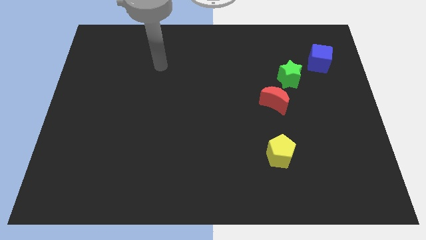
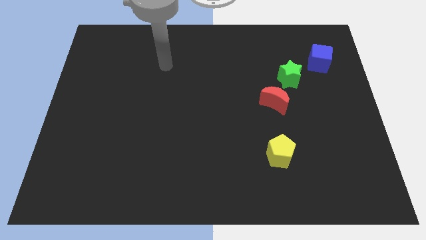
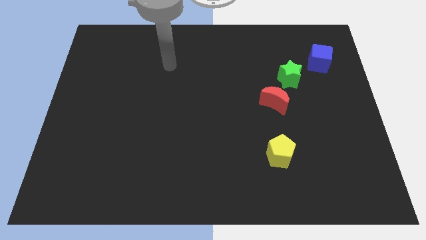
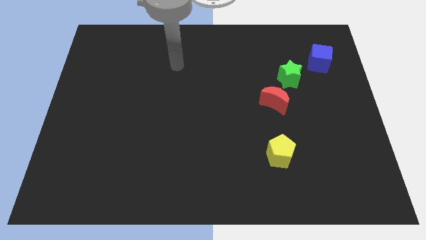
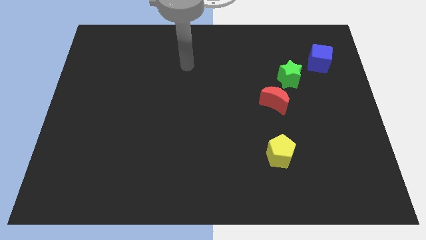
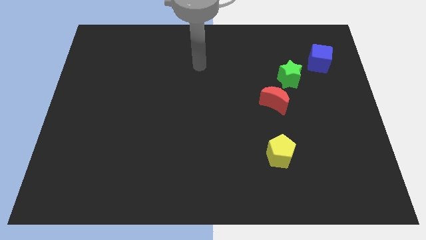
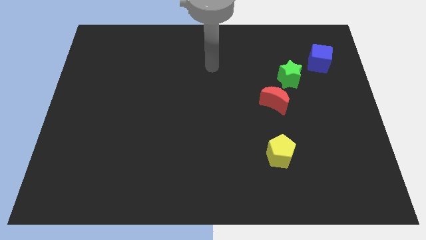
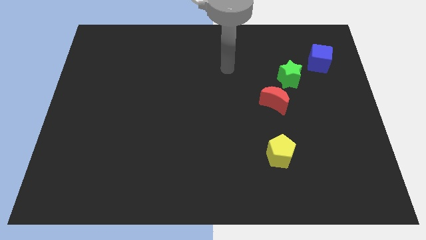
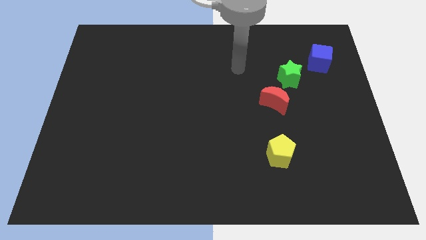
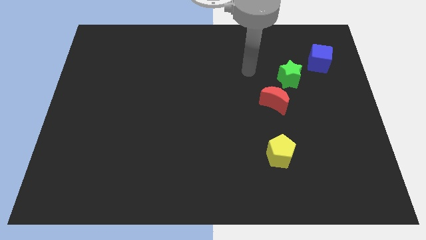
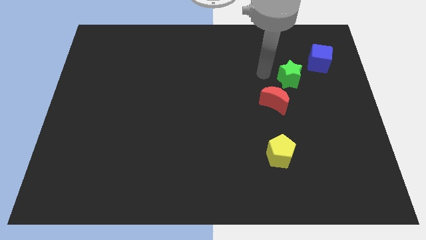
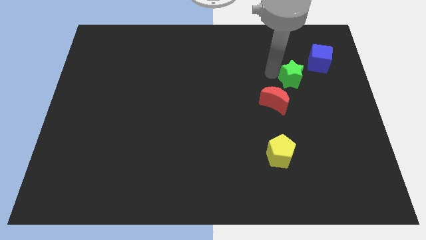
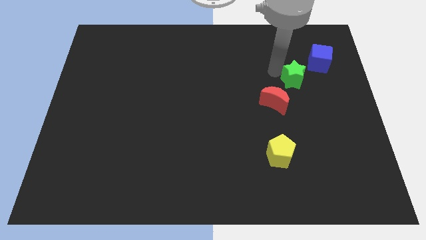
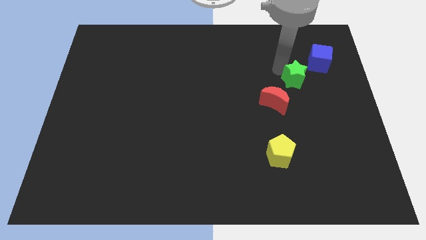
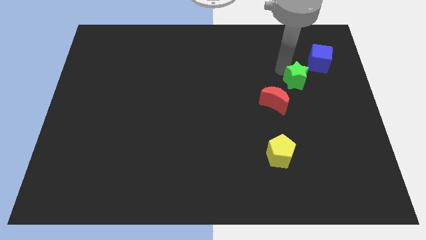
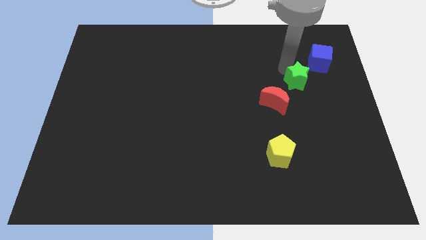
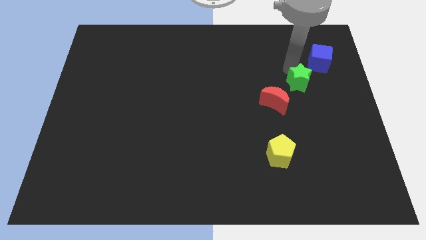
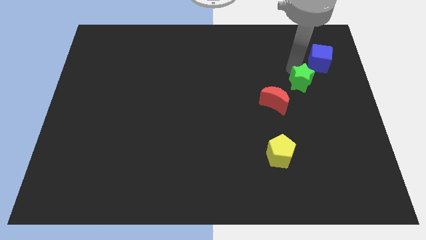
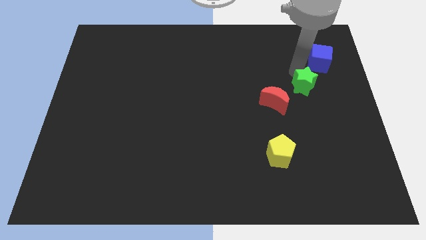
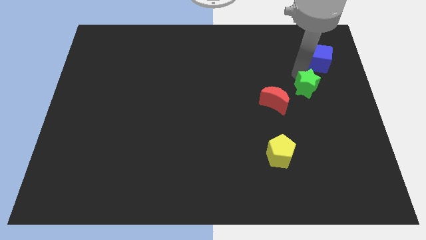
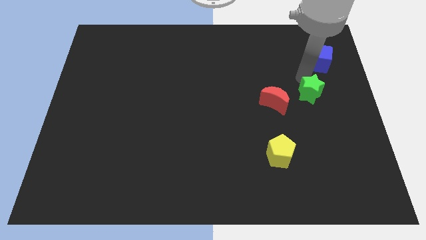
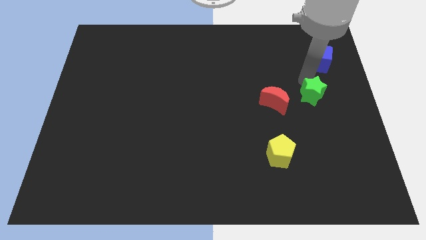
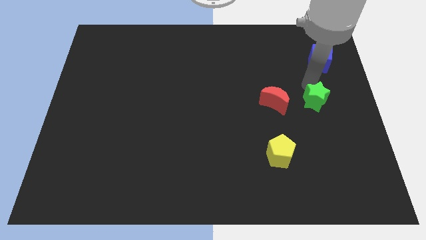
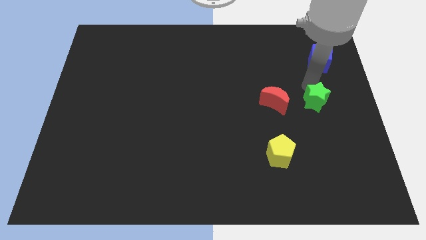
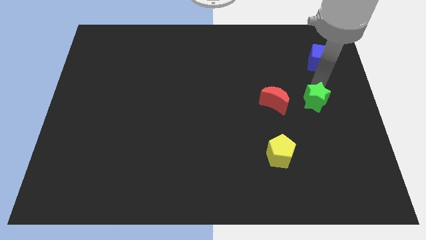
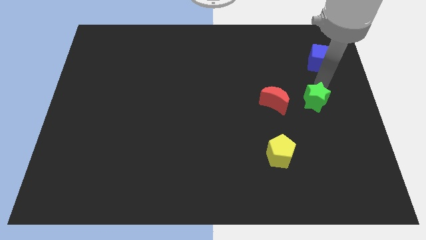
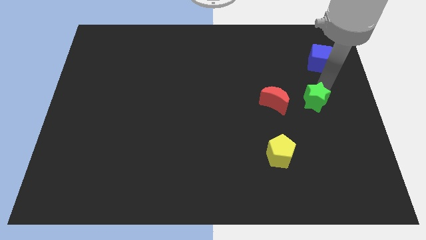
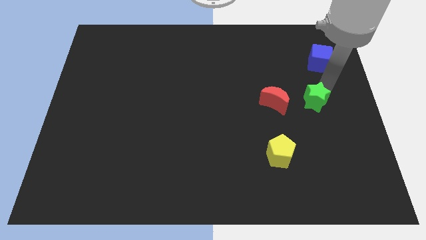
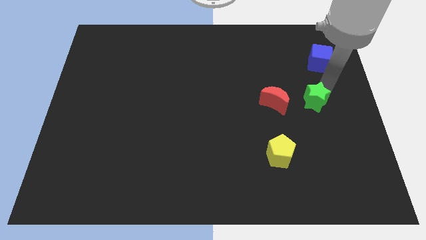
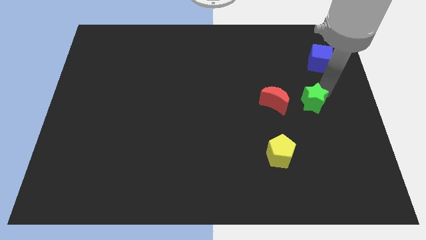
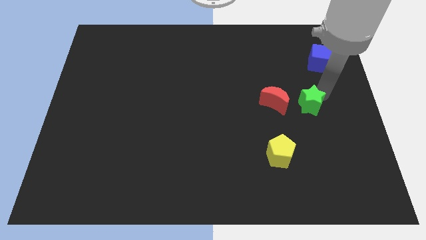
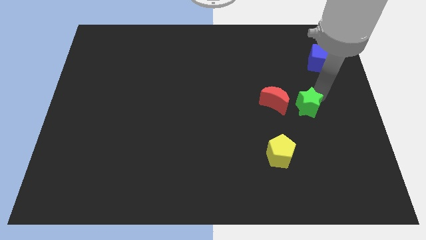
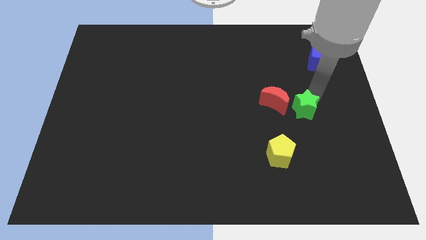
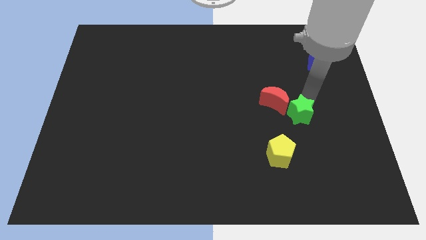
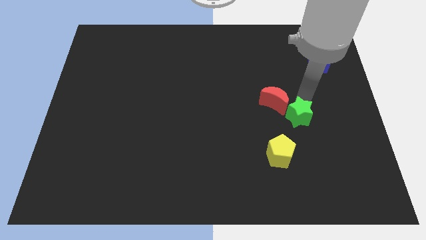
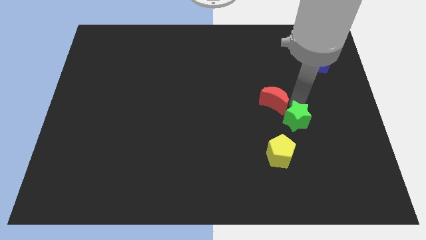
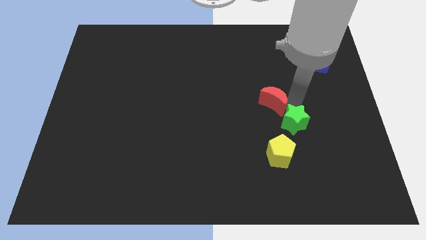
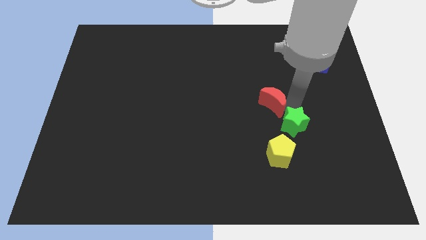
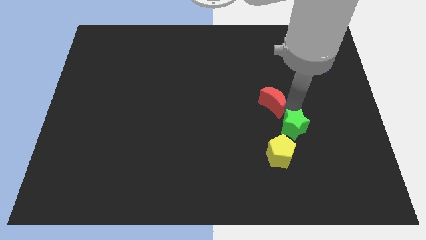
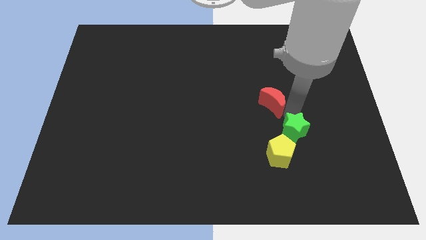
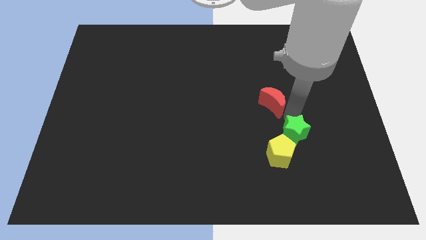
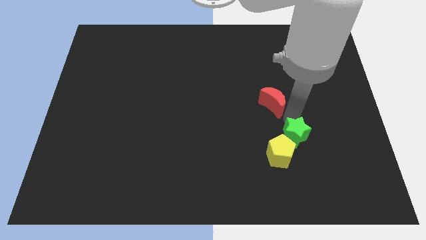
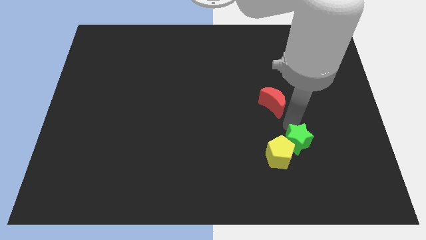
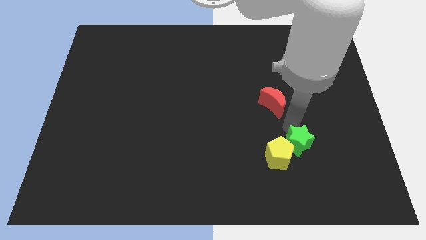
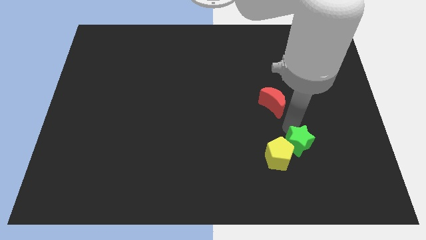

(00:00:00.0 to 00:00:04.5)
move the green block next to the pentagon

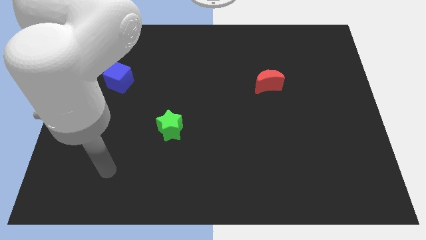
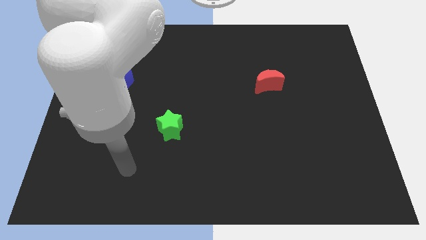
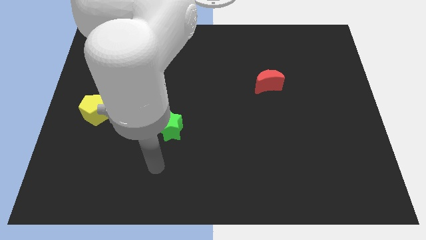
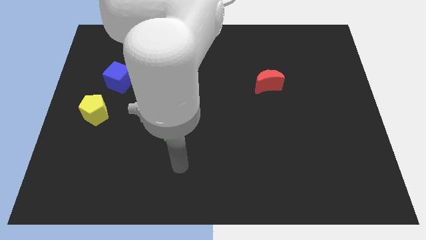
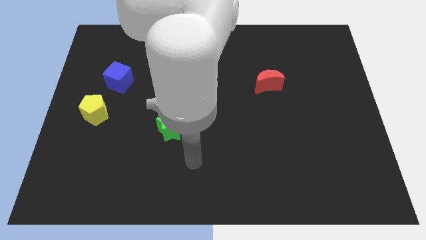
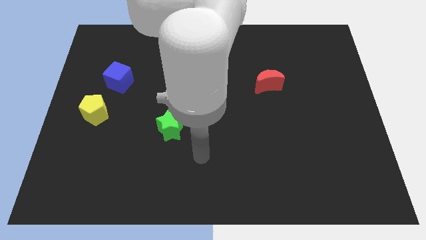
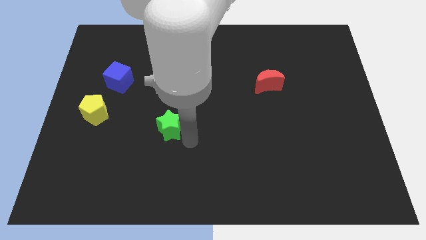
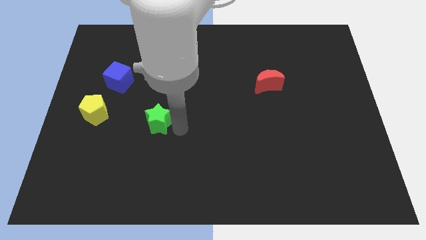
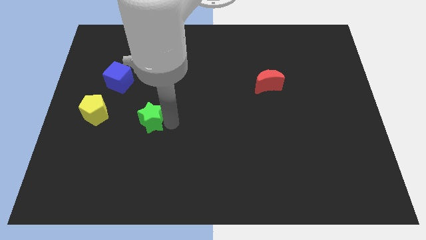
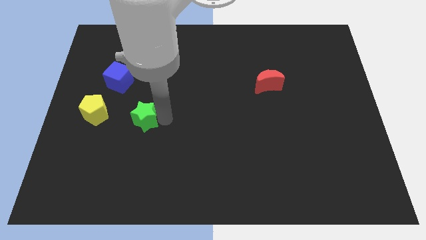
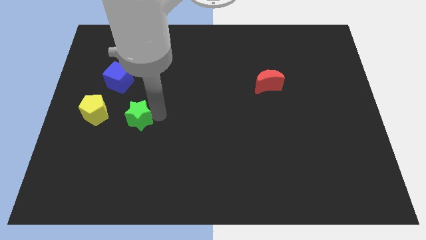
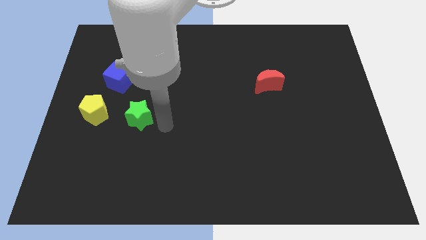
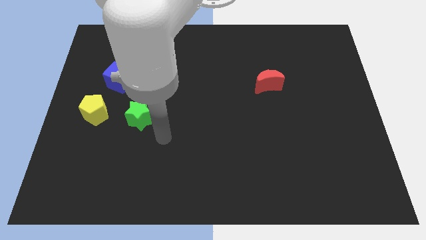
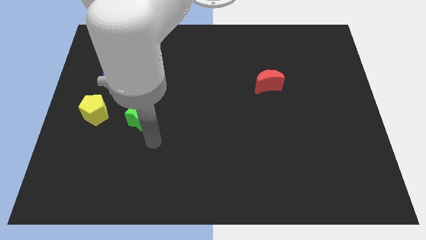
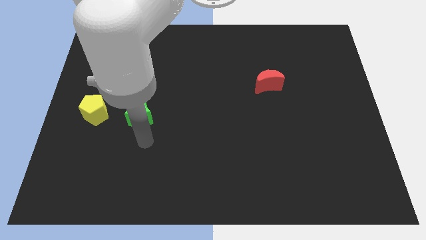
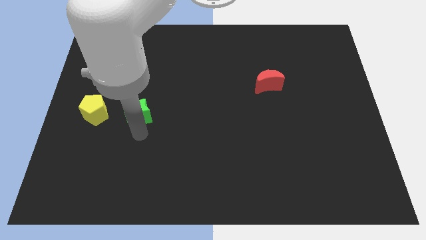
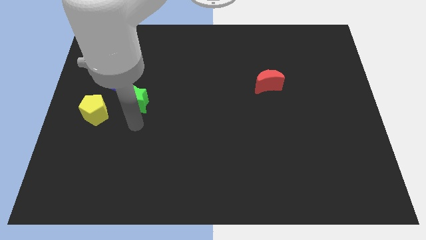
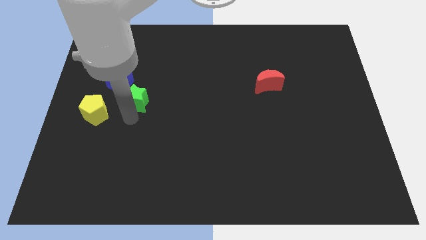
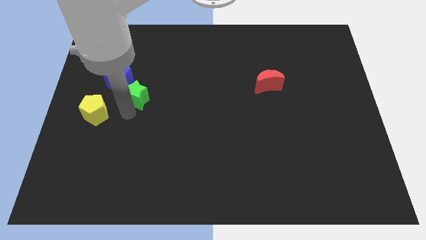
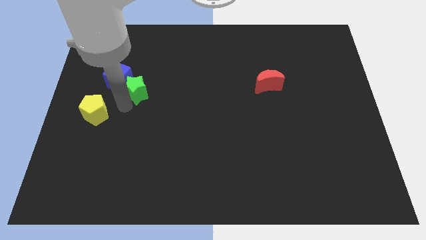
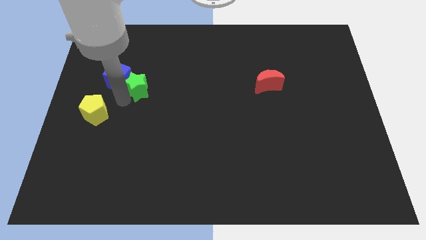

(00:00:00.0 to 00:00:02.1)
slide the green star to the cube

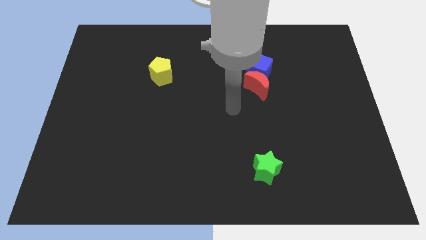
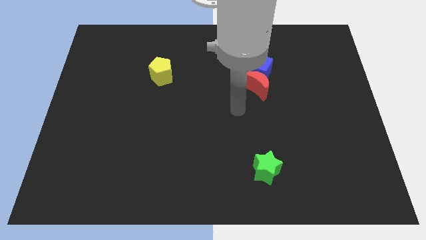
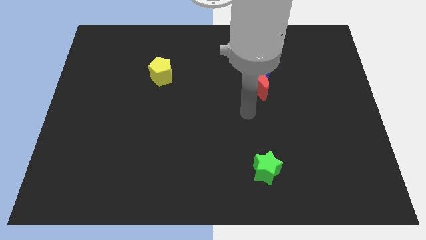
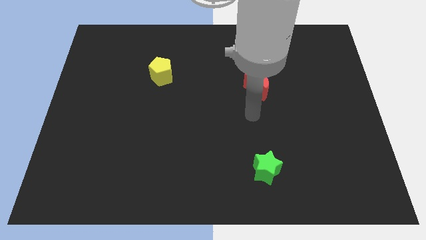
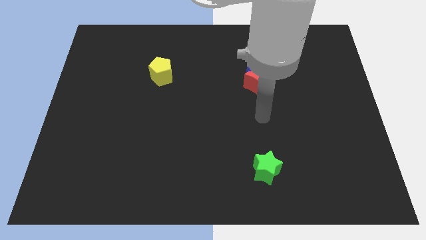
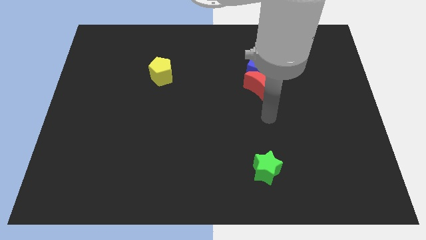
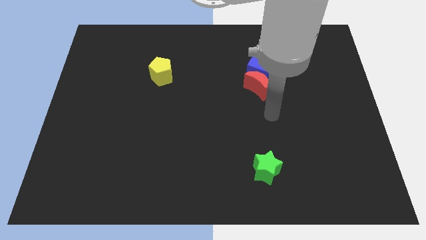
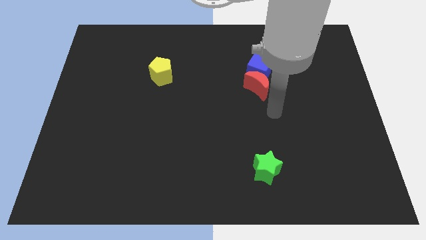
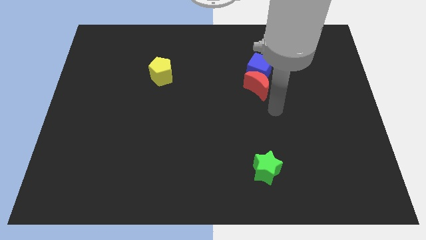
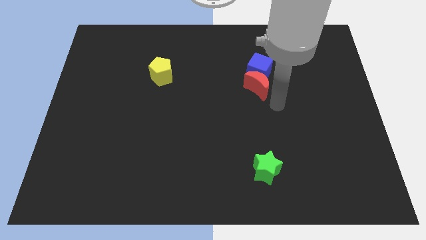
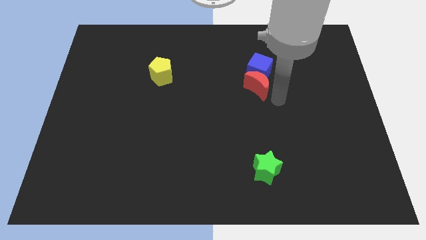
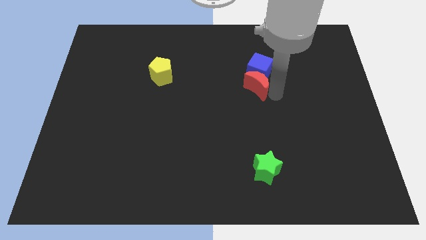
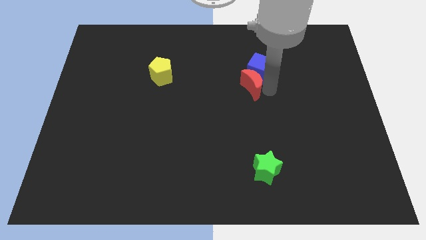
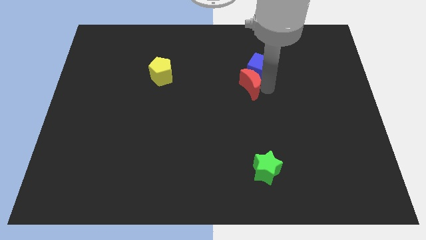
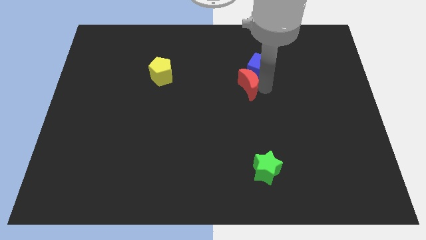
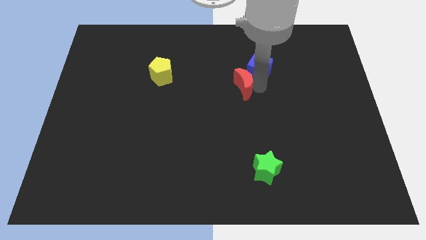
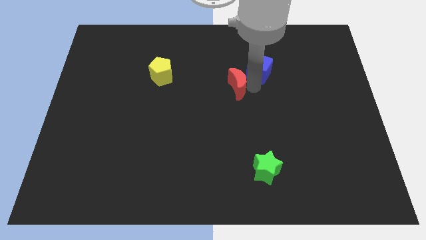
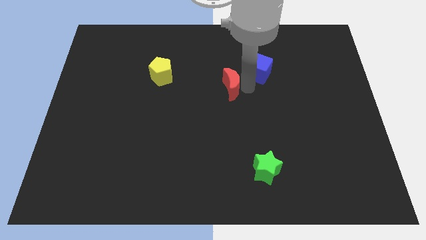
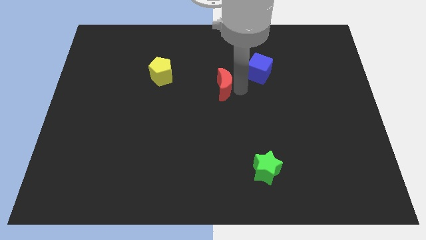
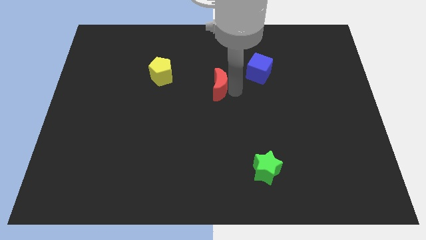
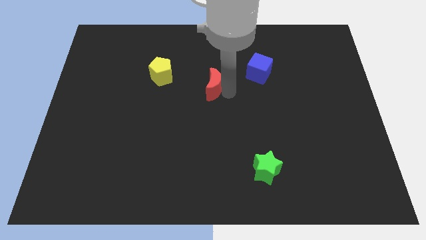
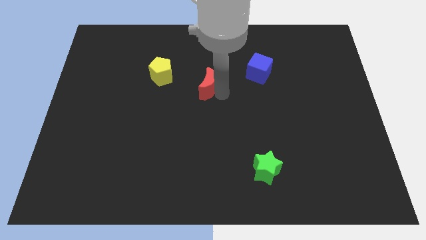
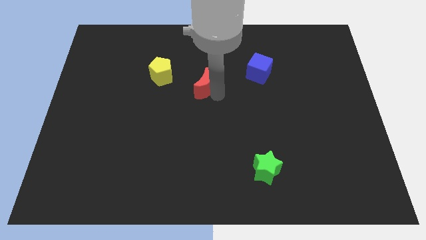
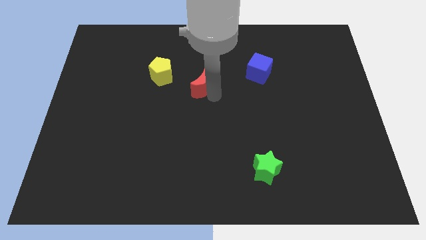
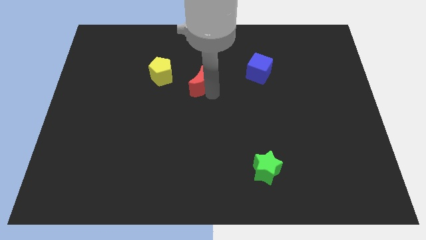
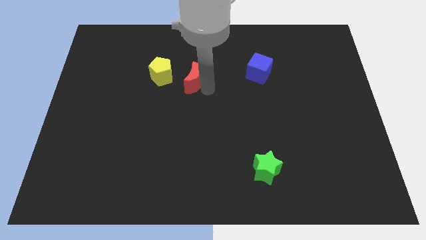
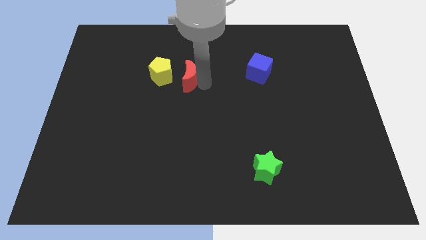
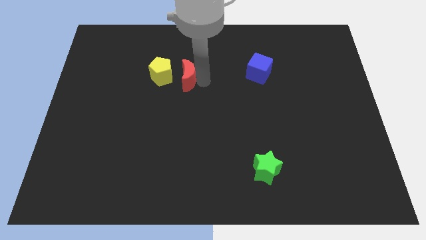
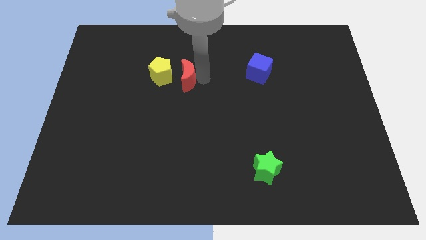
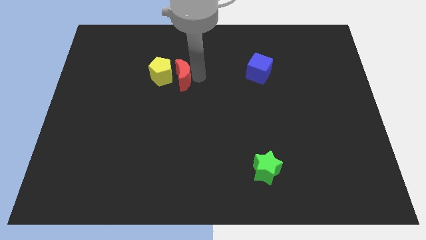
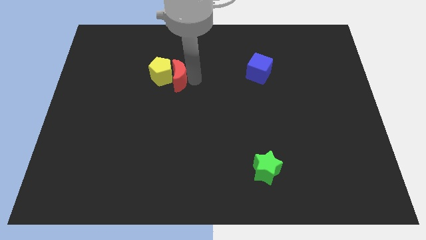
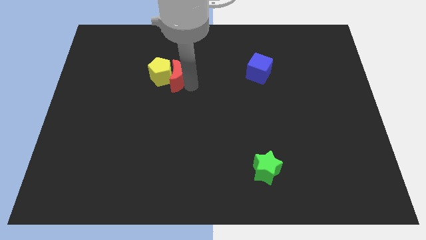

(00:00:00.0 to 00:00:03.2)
move the moon to the yellow pentagon
